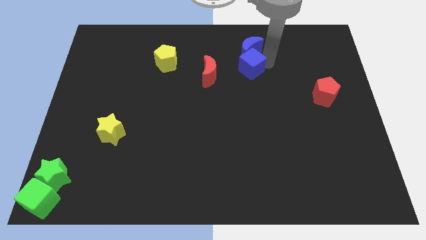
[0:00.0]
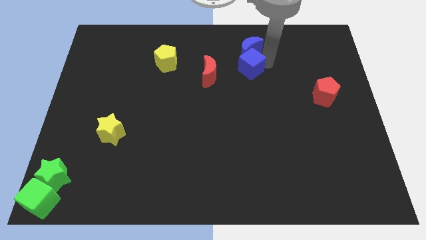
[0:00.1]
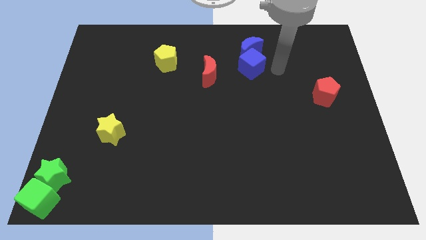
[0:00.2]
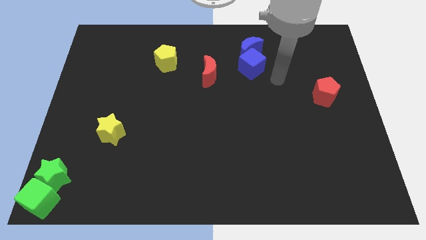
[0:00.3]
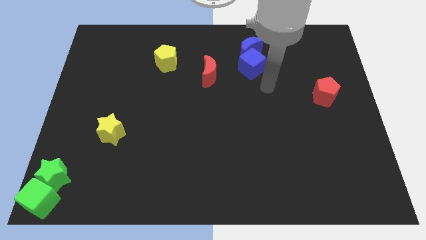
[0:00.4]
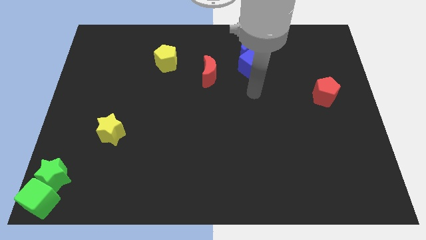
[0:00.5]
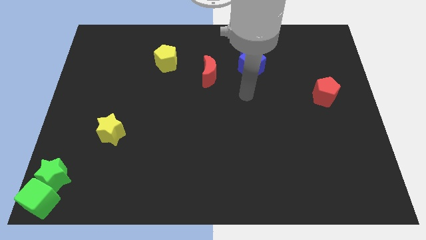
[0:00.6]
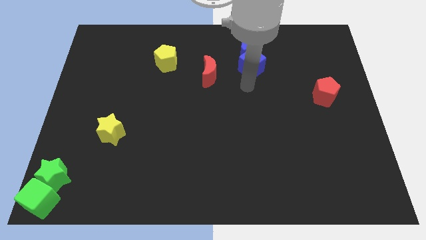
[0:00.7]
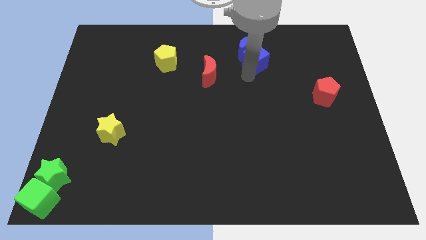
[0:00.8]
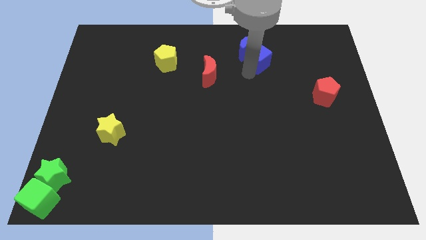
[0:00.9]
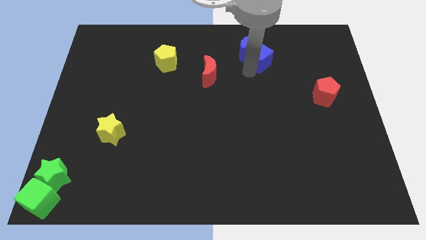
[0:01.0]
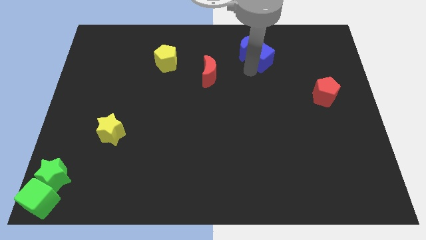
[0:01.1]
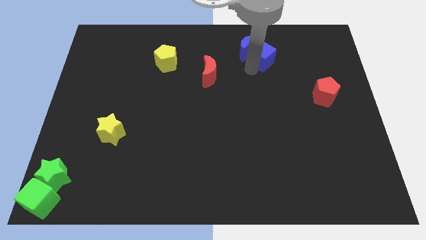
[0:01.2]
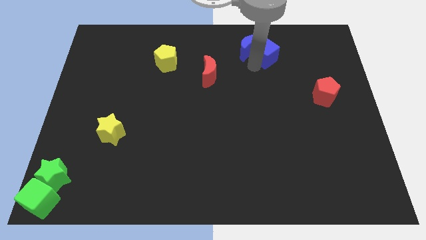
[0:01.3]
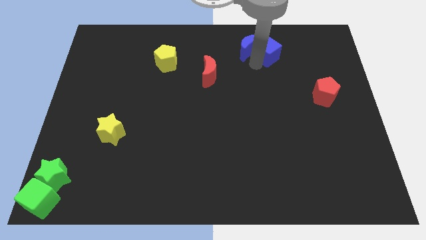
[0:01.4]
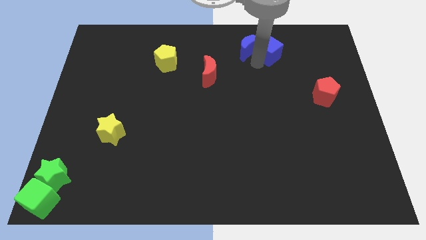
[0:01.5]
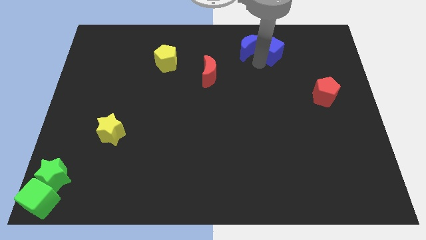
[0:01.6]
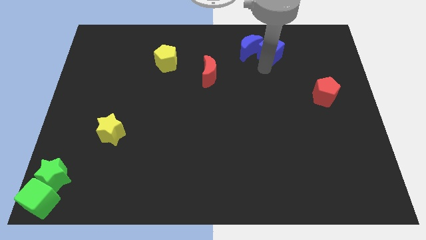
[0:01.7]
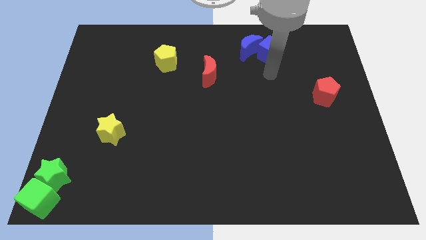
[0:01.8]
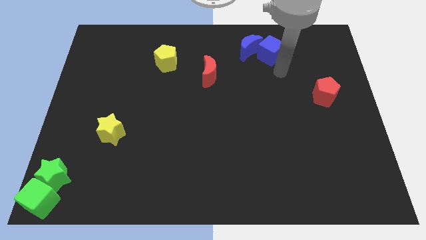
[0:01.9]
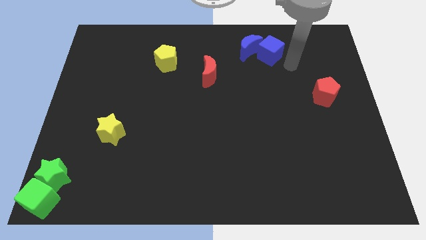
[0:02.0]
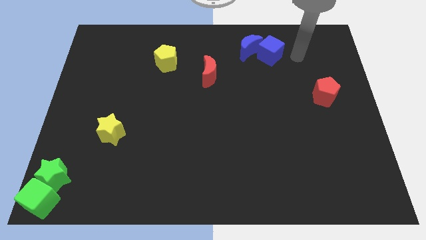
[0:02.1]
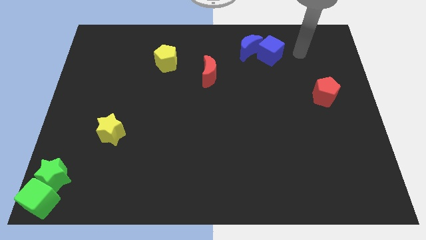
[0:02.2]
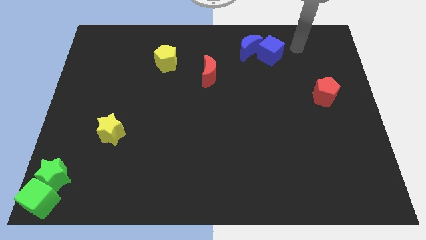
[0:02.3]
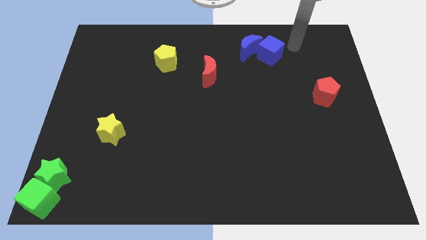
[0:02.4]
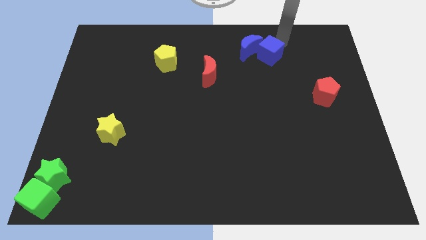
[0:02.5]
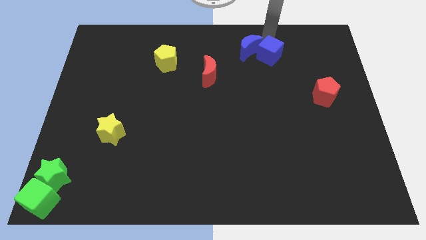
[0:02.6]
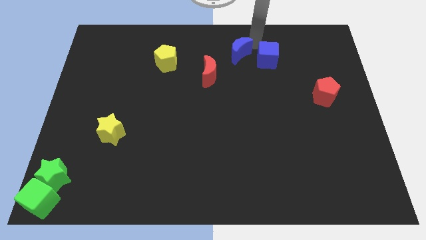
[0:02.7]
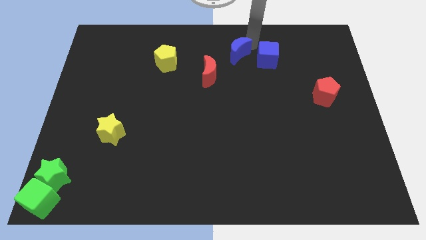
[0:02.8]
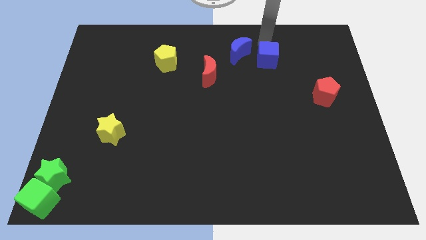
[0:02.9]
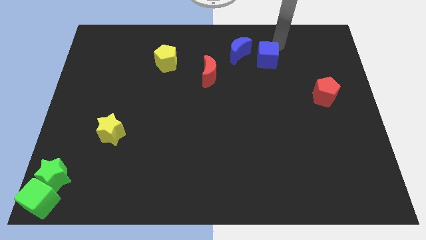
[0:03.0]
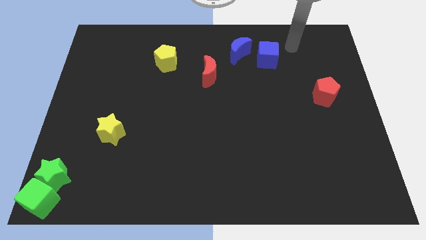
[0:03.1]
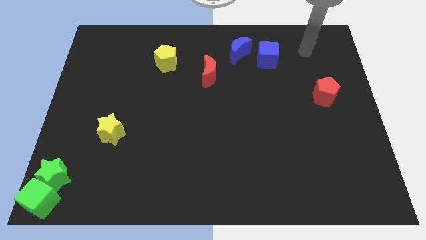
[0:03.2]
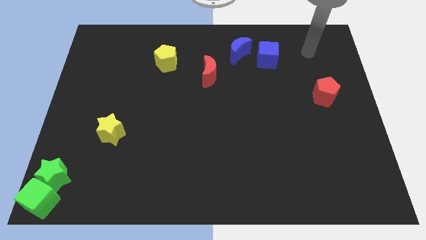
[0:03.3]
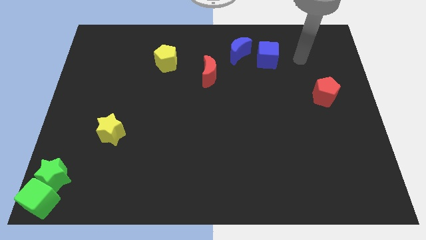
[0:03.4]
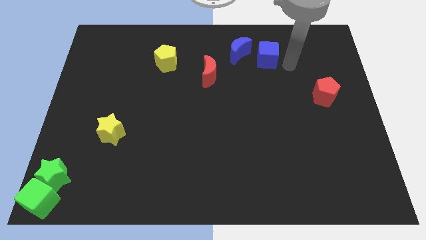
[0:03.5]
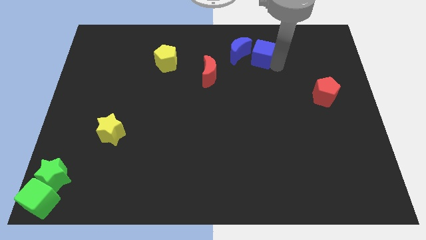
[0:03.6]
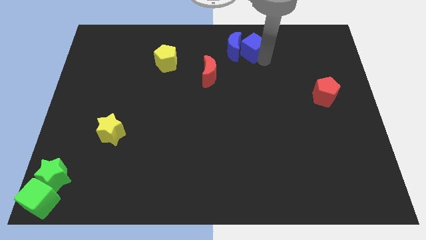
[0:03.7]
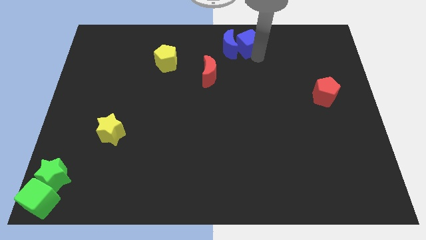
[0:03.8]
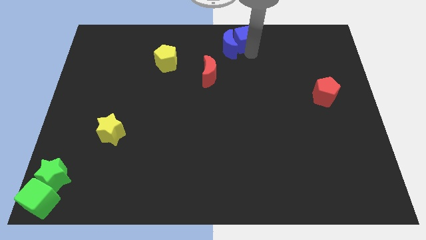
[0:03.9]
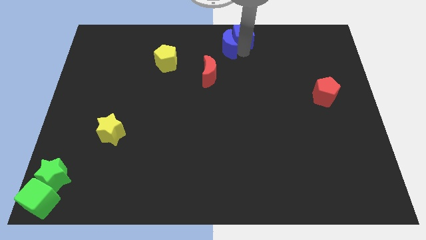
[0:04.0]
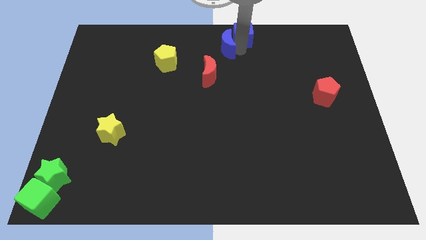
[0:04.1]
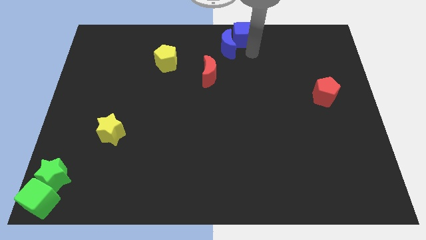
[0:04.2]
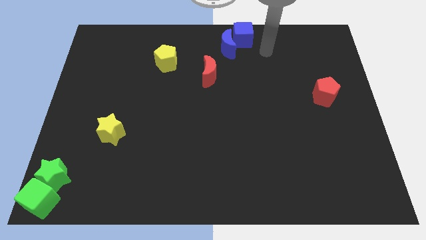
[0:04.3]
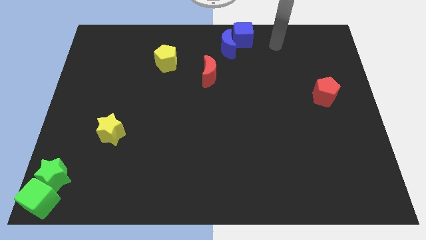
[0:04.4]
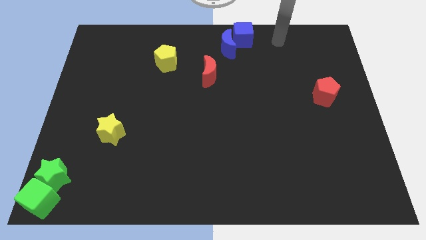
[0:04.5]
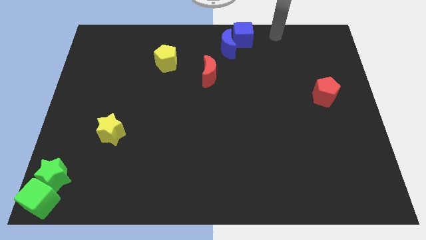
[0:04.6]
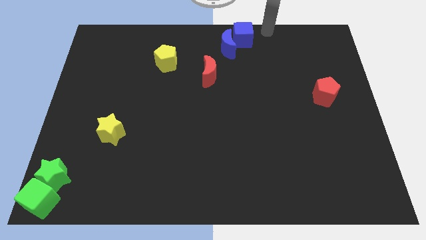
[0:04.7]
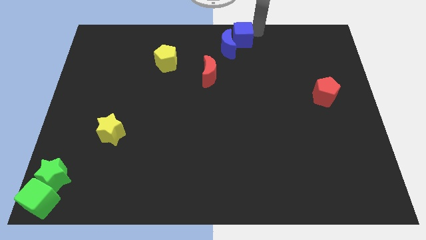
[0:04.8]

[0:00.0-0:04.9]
push the blue blocks together to the top center of the board

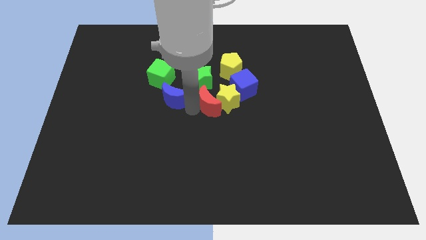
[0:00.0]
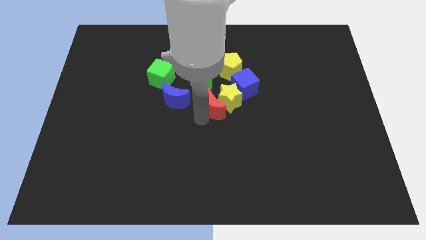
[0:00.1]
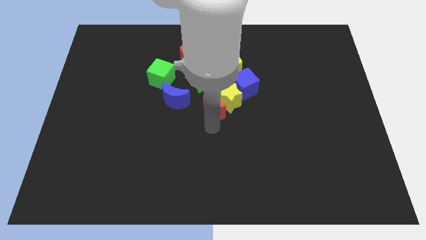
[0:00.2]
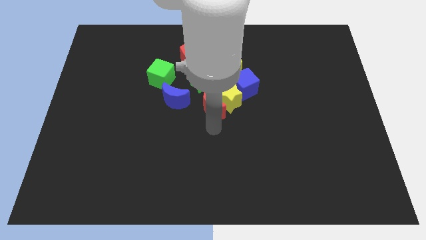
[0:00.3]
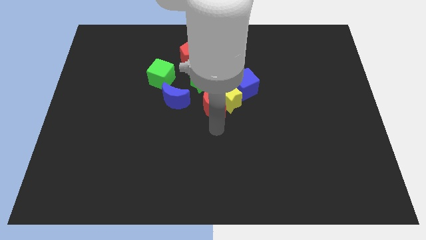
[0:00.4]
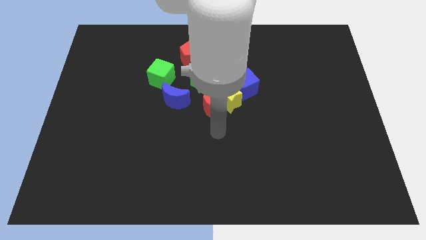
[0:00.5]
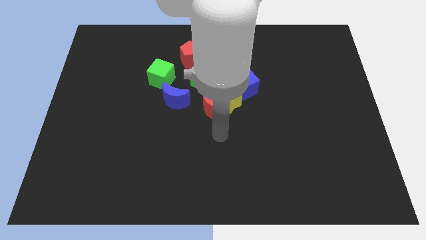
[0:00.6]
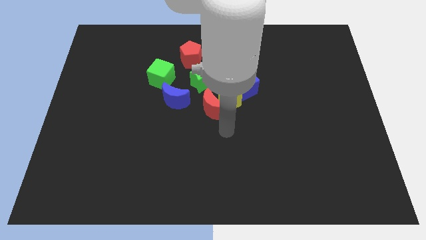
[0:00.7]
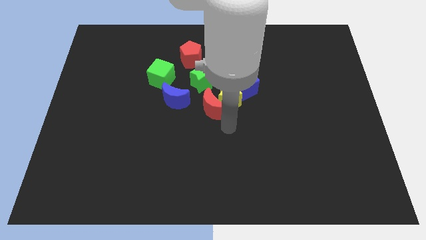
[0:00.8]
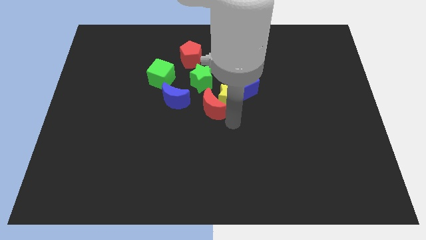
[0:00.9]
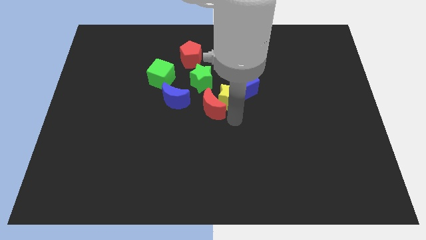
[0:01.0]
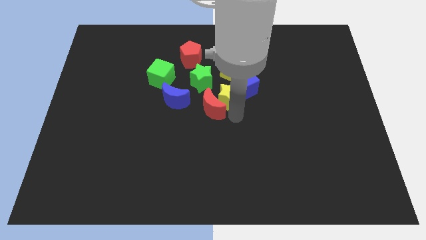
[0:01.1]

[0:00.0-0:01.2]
slightly push the red moon into yellow star

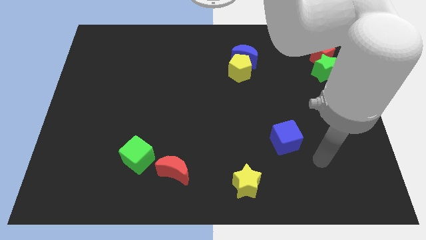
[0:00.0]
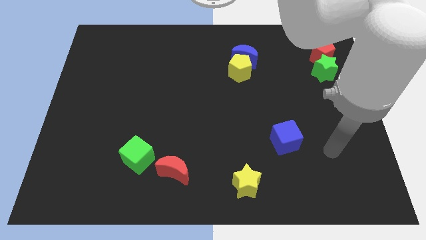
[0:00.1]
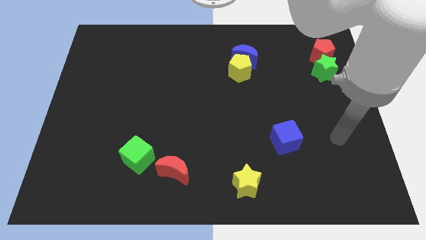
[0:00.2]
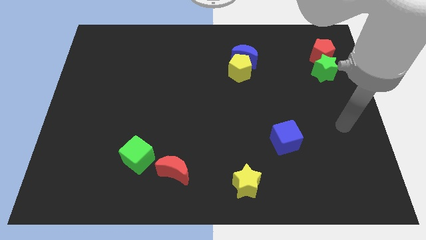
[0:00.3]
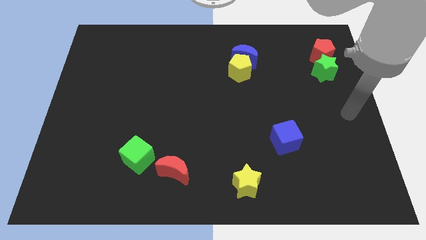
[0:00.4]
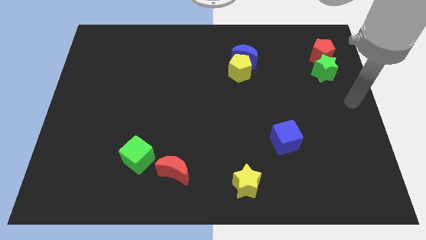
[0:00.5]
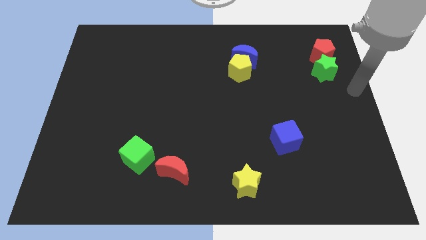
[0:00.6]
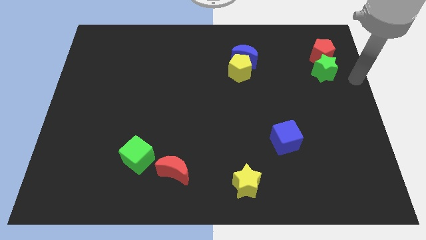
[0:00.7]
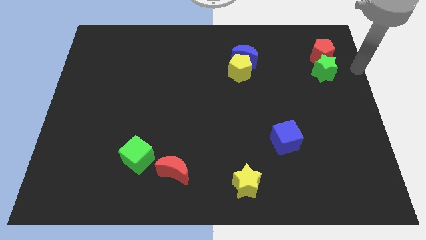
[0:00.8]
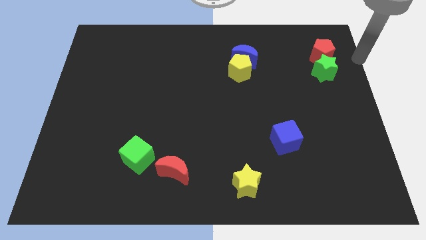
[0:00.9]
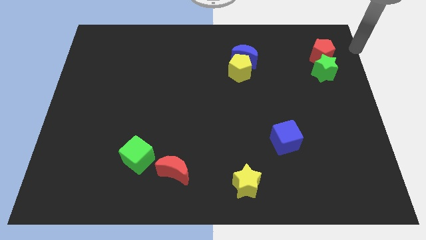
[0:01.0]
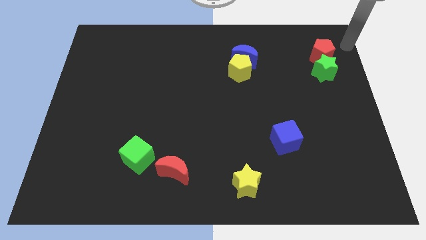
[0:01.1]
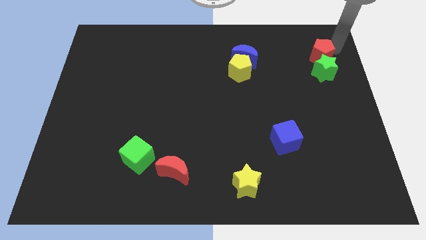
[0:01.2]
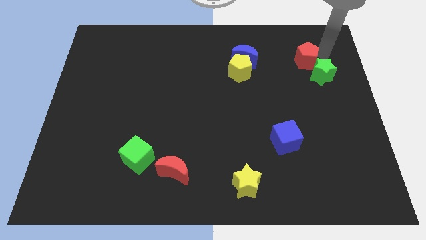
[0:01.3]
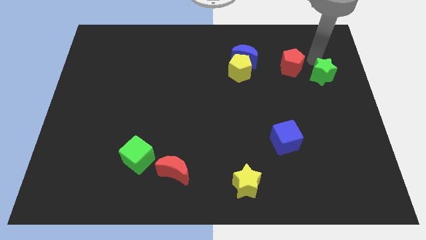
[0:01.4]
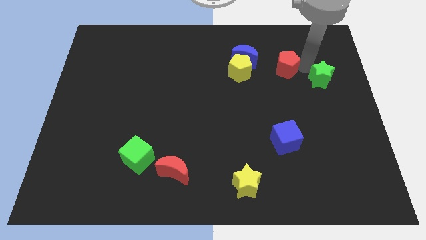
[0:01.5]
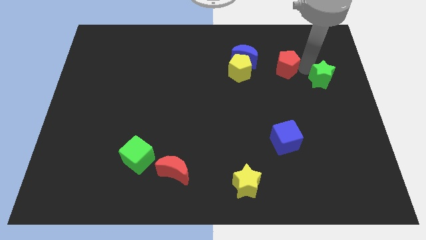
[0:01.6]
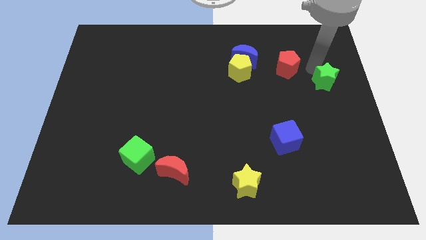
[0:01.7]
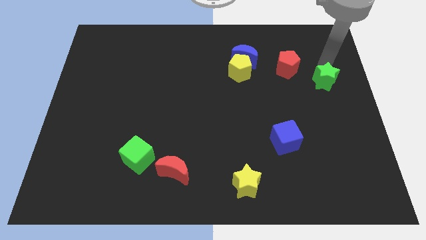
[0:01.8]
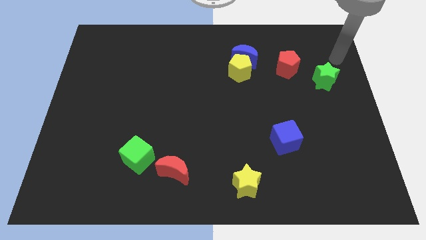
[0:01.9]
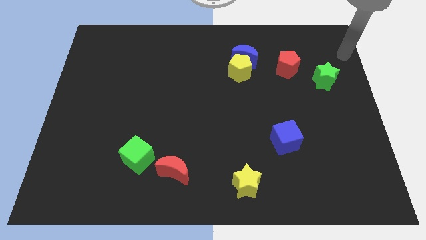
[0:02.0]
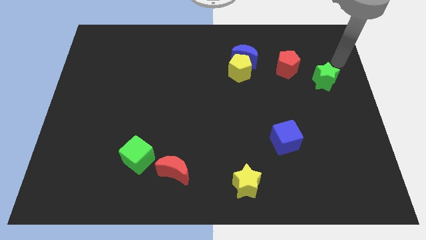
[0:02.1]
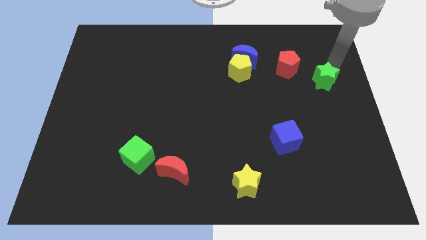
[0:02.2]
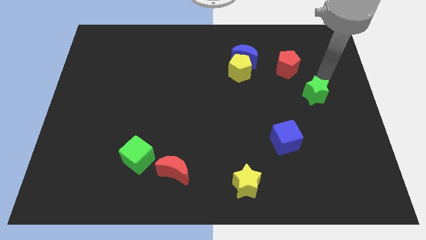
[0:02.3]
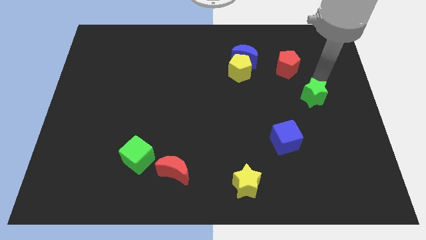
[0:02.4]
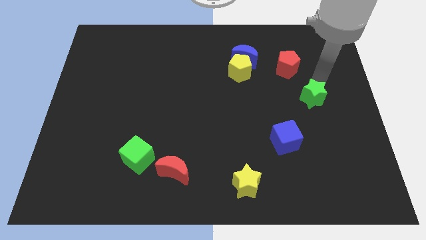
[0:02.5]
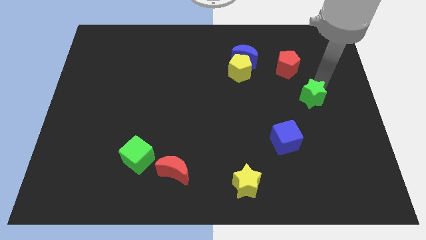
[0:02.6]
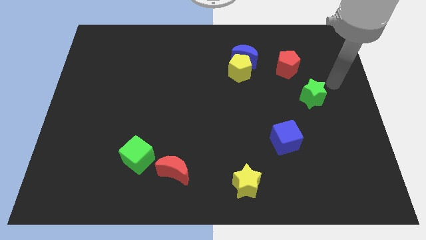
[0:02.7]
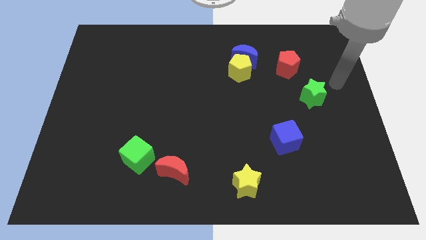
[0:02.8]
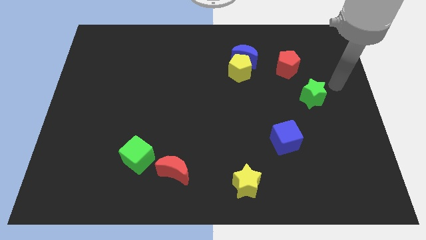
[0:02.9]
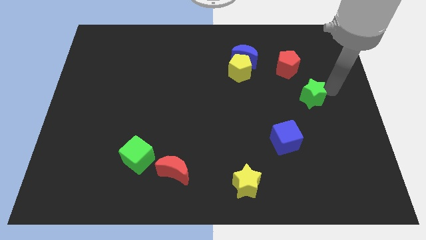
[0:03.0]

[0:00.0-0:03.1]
separate te green star and the red pentagon
